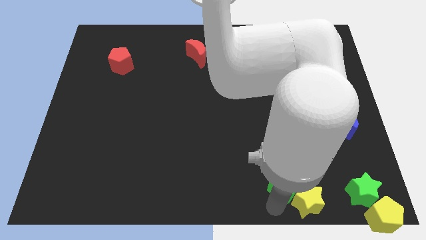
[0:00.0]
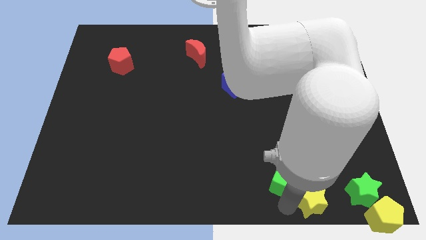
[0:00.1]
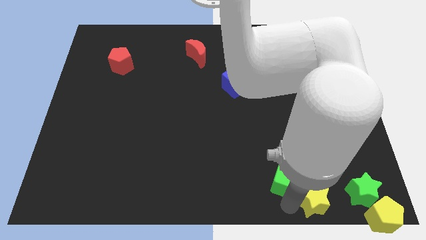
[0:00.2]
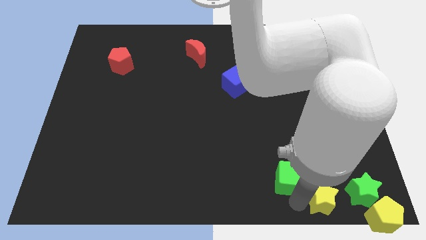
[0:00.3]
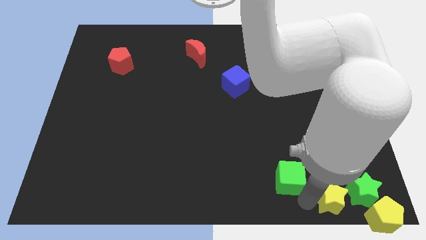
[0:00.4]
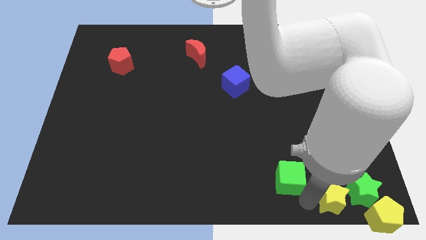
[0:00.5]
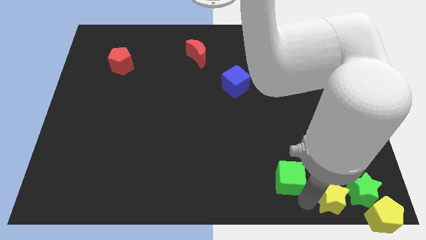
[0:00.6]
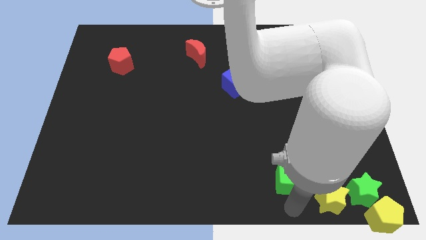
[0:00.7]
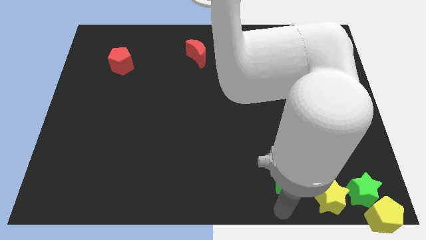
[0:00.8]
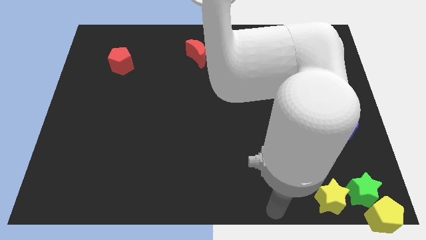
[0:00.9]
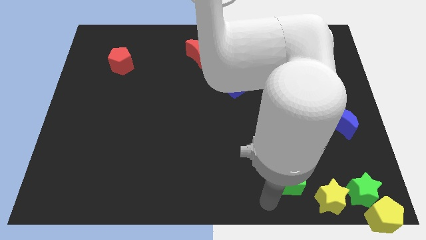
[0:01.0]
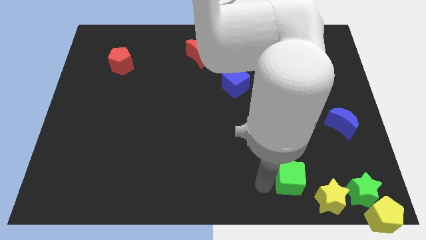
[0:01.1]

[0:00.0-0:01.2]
place yellow star to the left side of green star

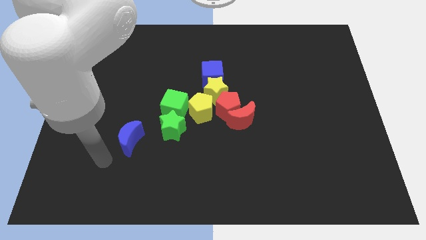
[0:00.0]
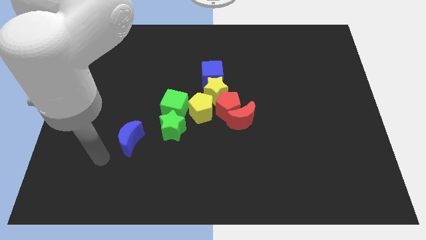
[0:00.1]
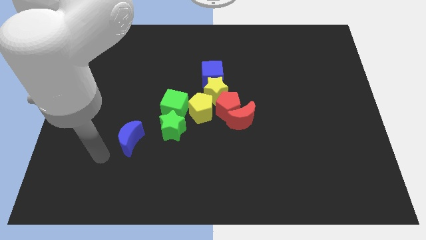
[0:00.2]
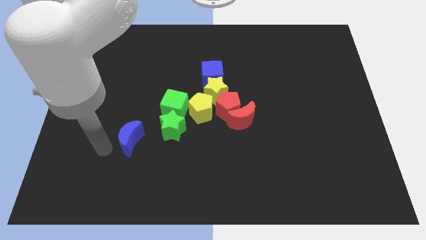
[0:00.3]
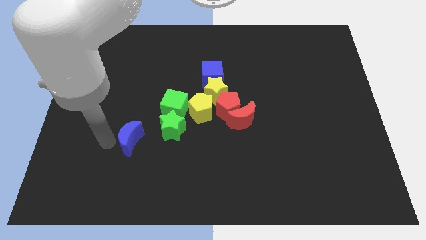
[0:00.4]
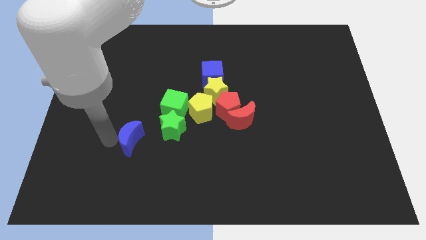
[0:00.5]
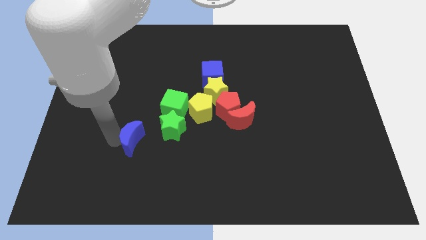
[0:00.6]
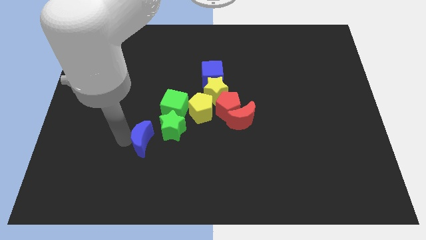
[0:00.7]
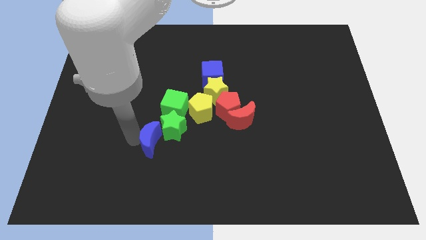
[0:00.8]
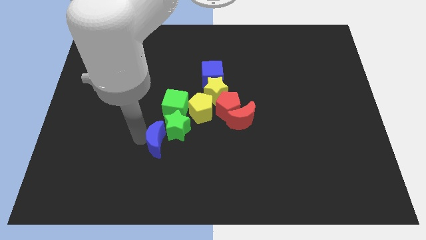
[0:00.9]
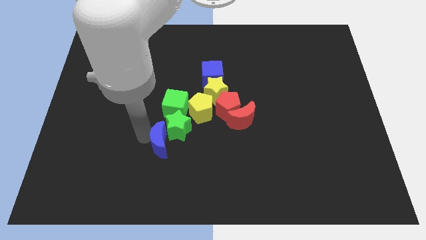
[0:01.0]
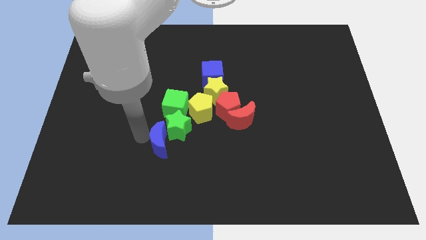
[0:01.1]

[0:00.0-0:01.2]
push the blue crescent into the green star

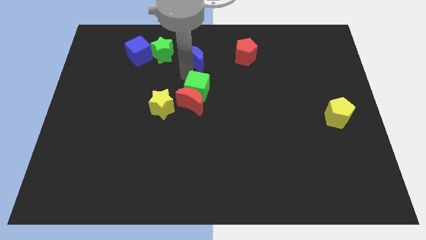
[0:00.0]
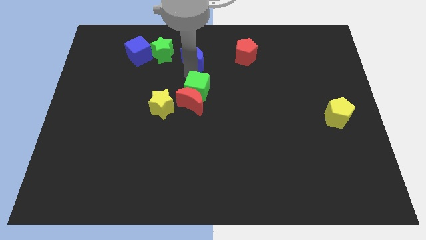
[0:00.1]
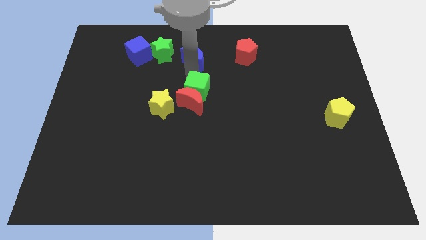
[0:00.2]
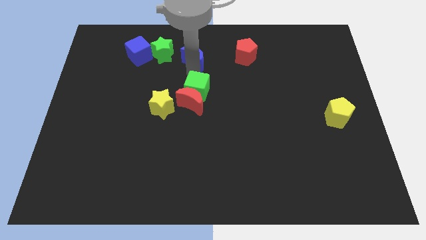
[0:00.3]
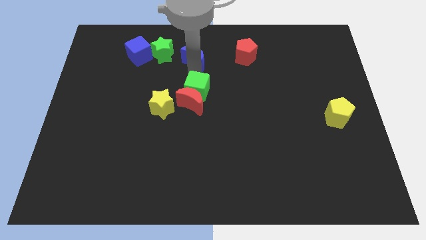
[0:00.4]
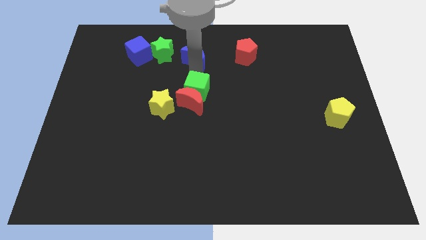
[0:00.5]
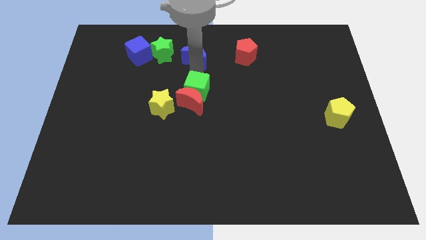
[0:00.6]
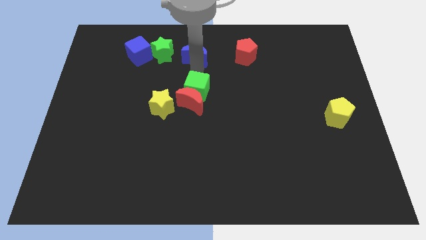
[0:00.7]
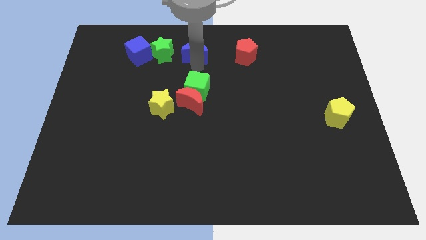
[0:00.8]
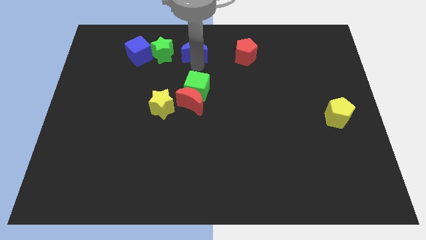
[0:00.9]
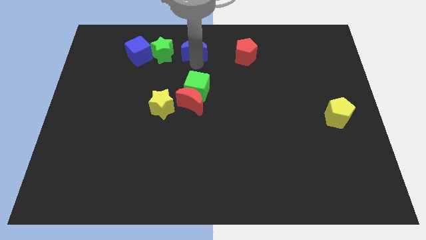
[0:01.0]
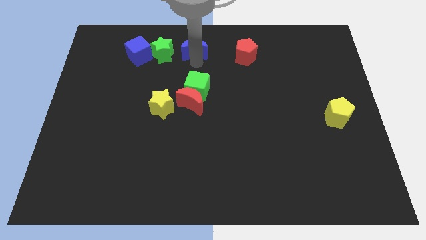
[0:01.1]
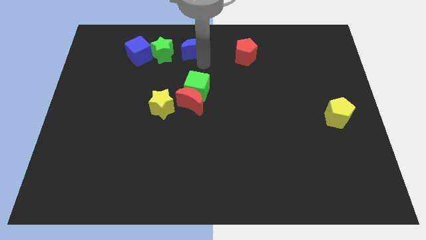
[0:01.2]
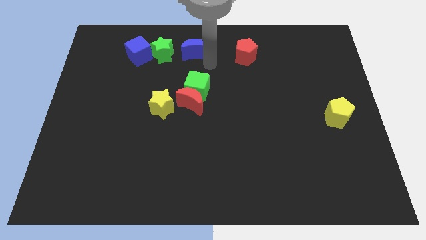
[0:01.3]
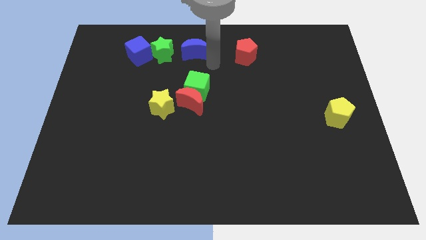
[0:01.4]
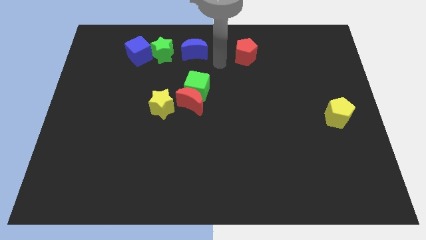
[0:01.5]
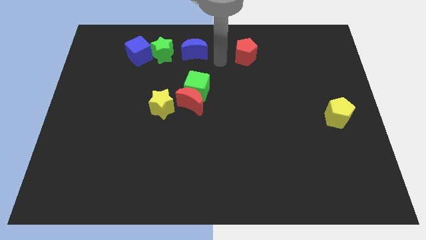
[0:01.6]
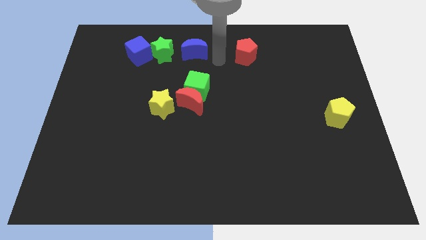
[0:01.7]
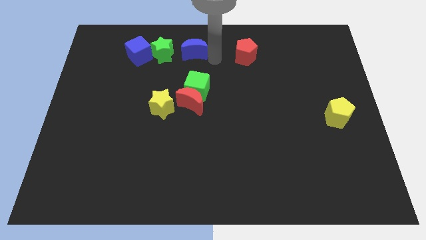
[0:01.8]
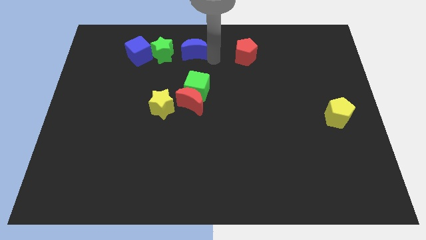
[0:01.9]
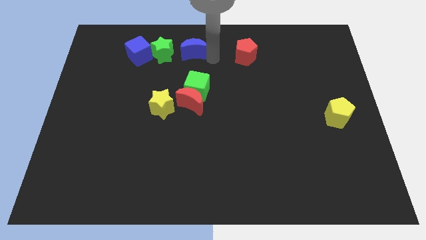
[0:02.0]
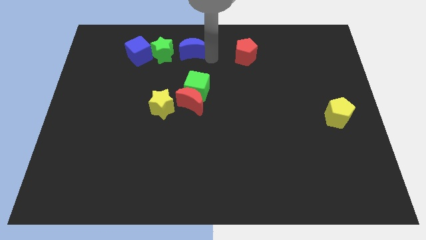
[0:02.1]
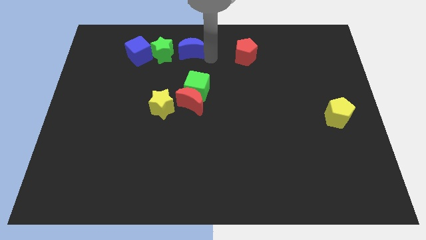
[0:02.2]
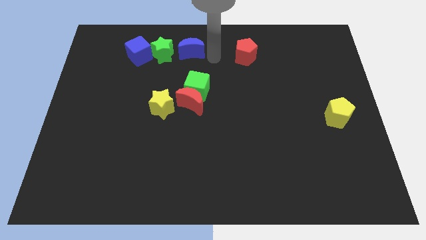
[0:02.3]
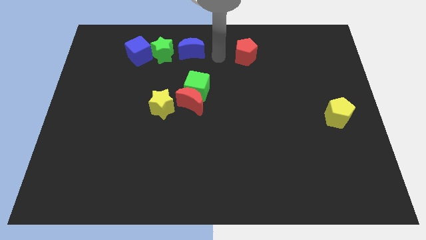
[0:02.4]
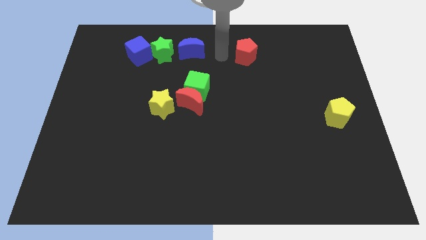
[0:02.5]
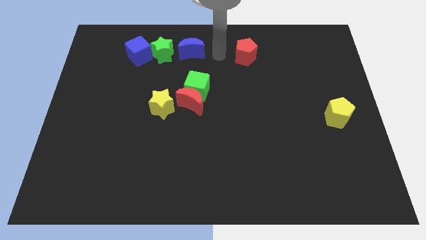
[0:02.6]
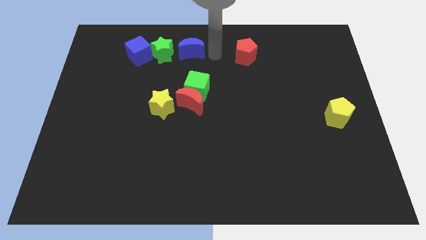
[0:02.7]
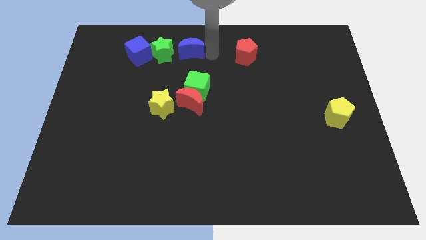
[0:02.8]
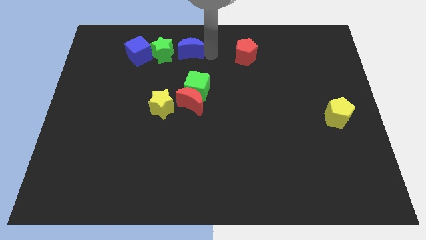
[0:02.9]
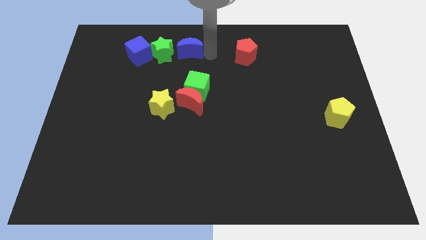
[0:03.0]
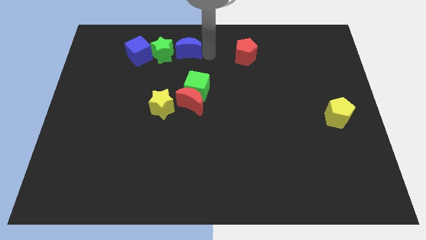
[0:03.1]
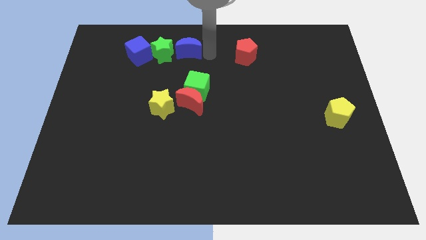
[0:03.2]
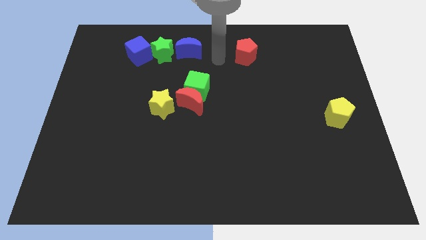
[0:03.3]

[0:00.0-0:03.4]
move blue moon to the right of green star

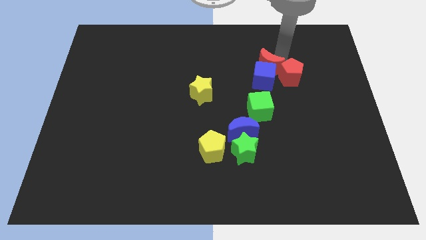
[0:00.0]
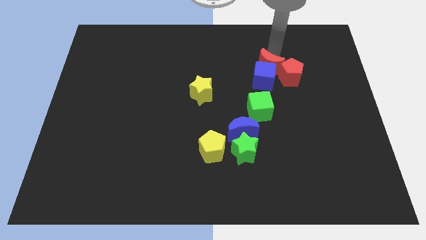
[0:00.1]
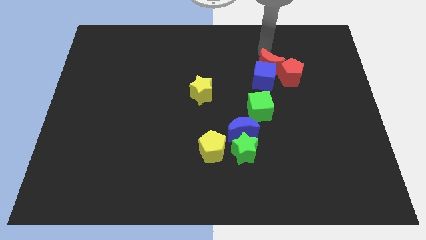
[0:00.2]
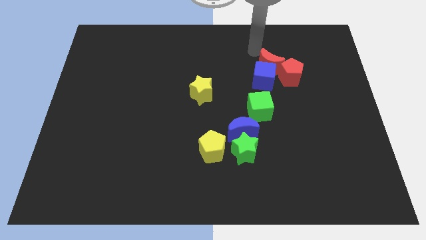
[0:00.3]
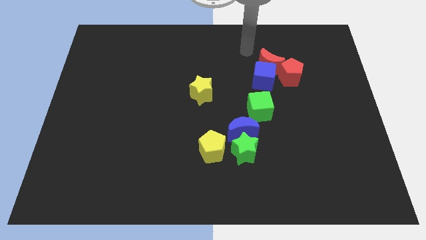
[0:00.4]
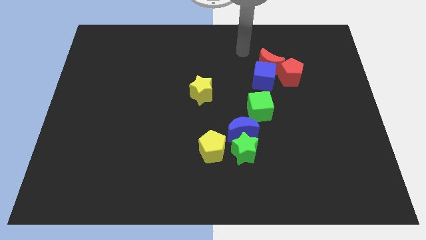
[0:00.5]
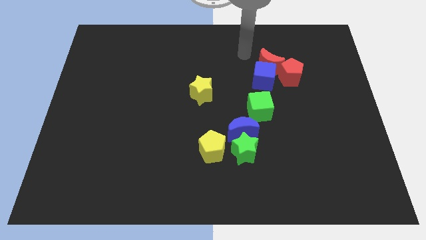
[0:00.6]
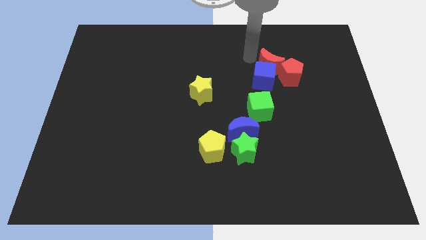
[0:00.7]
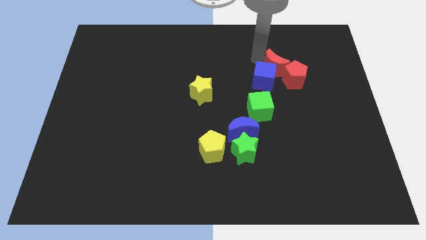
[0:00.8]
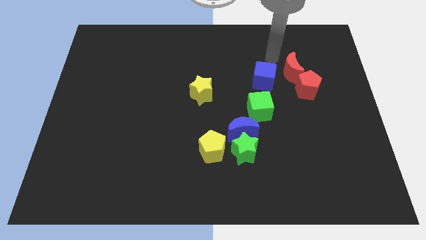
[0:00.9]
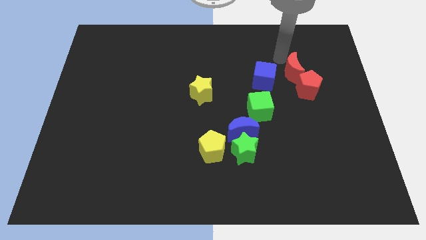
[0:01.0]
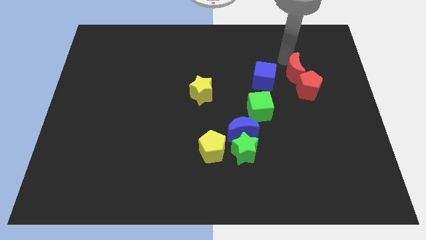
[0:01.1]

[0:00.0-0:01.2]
move the red crescent slightly to the right

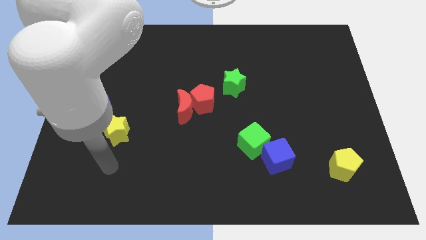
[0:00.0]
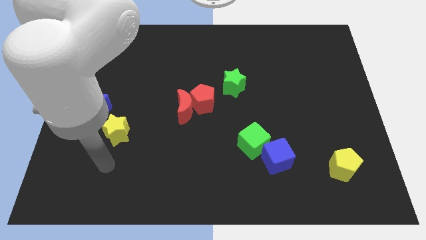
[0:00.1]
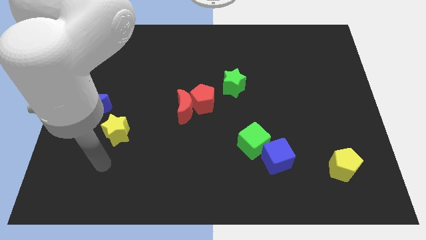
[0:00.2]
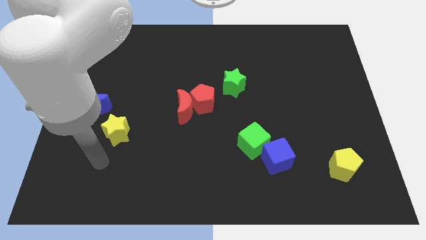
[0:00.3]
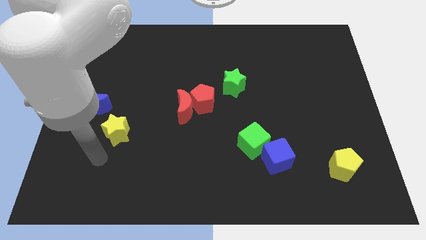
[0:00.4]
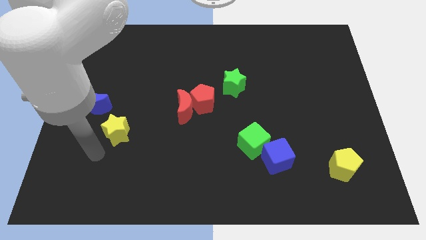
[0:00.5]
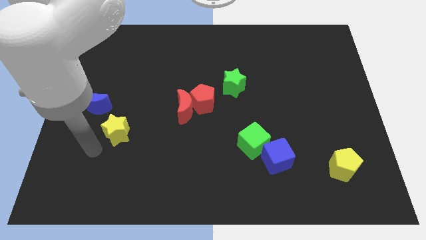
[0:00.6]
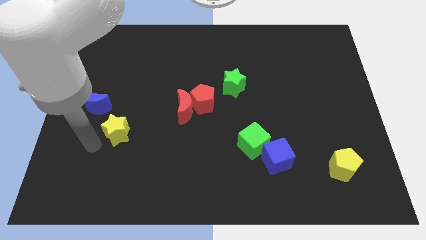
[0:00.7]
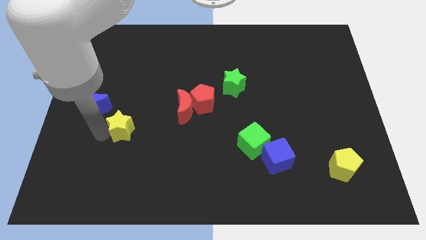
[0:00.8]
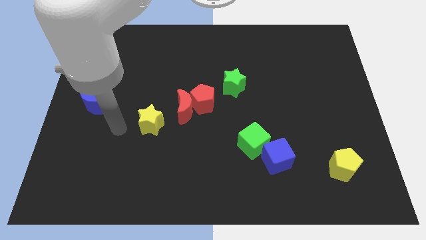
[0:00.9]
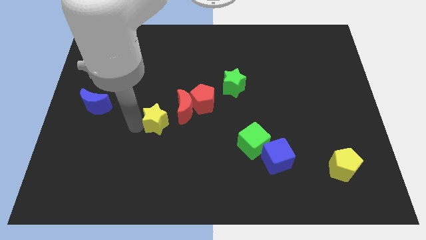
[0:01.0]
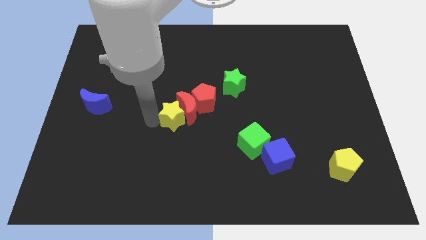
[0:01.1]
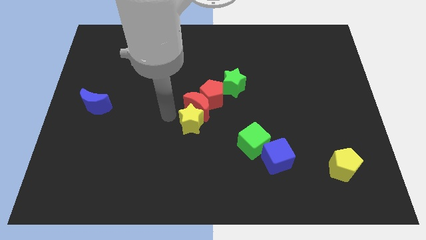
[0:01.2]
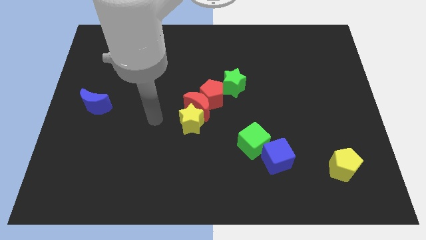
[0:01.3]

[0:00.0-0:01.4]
push the yellow star into the red moon

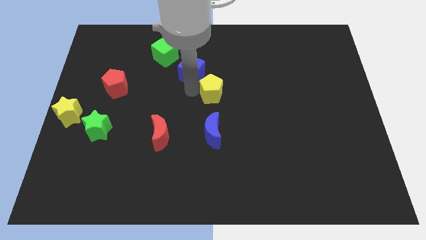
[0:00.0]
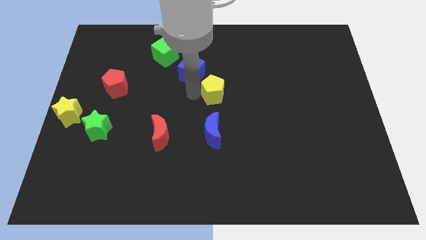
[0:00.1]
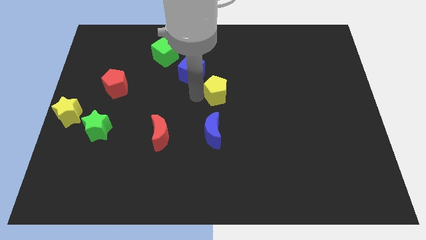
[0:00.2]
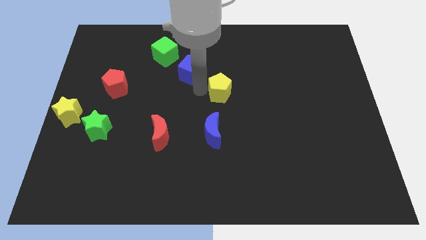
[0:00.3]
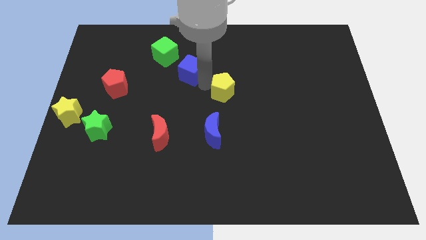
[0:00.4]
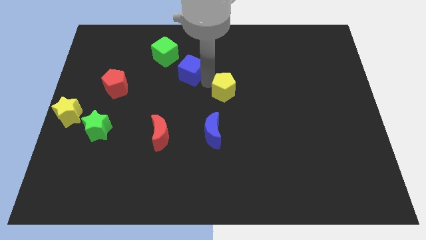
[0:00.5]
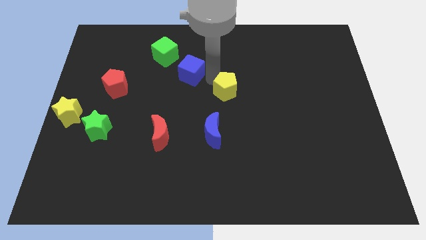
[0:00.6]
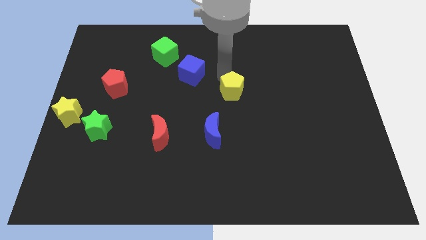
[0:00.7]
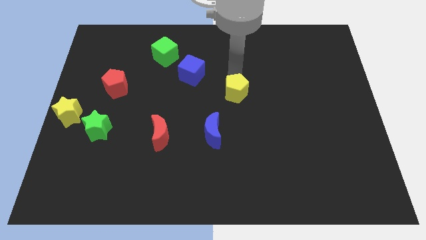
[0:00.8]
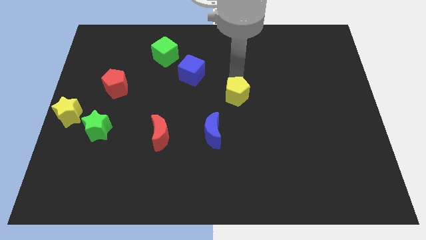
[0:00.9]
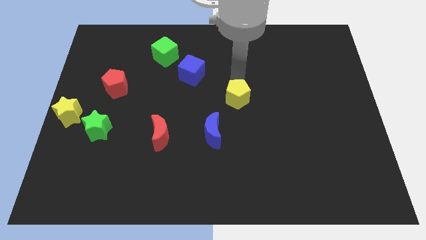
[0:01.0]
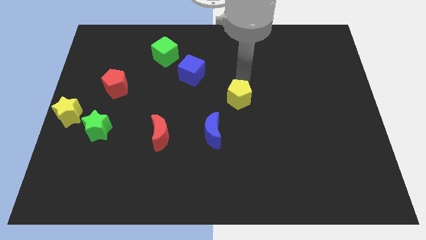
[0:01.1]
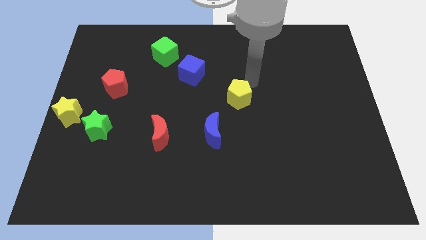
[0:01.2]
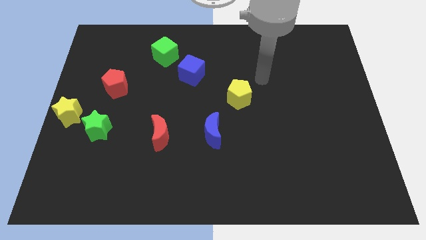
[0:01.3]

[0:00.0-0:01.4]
separate the yellow pentagon from the blue cube
